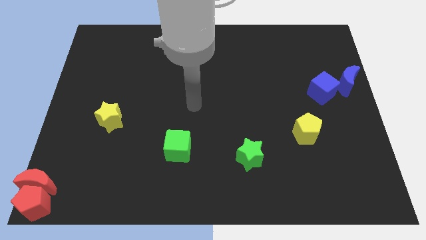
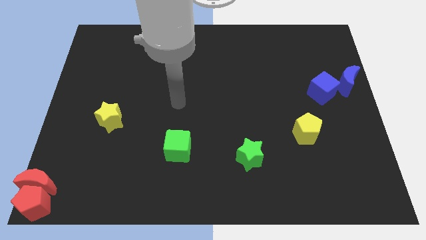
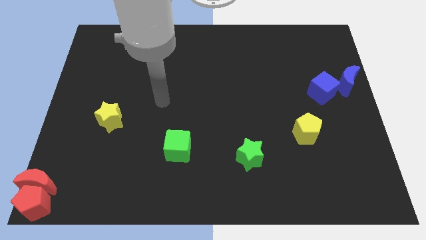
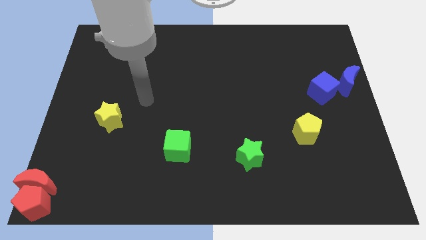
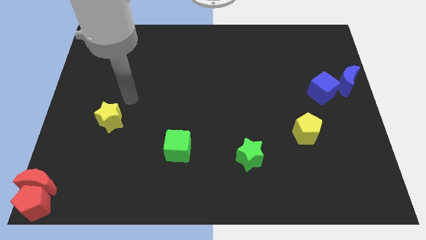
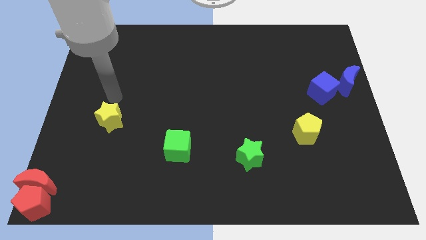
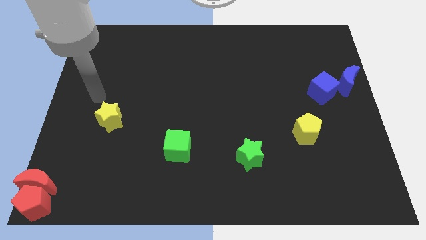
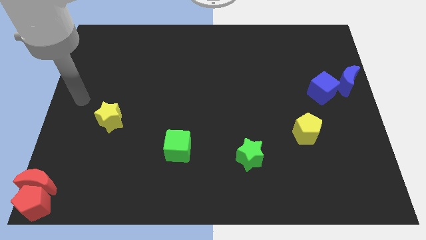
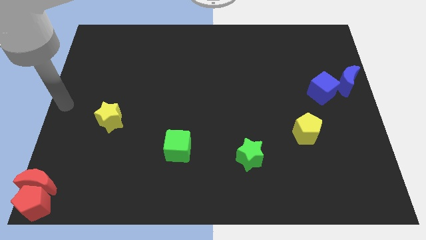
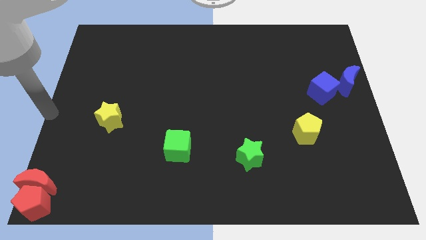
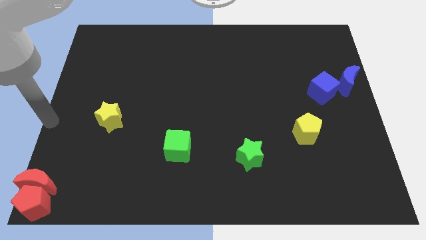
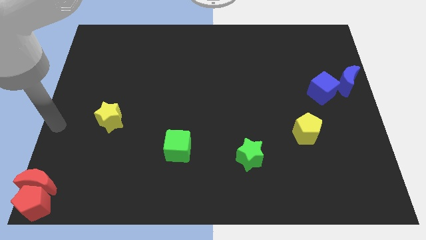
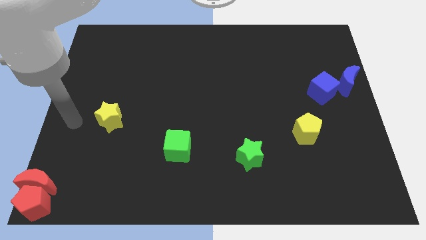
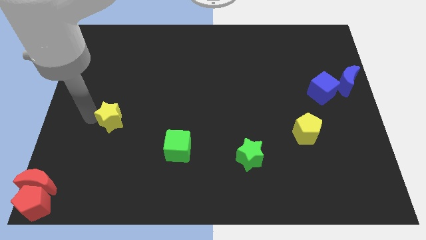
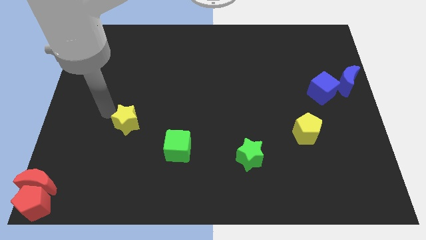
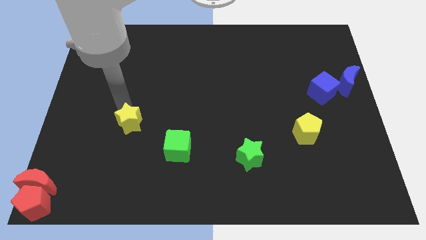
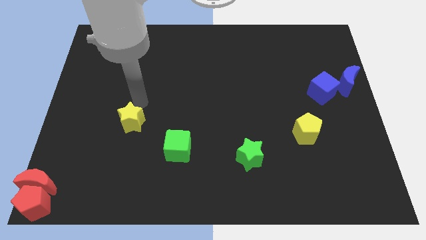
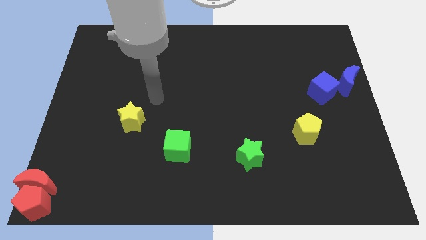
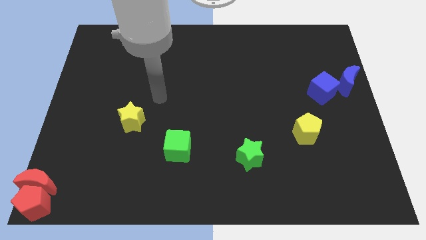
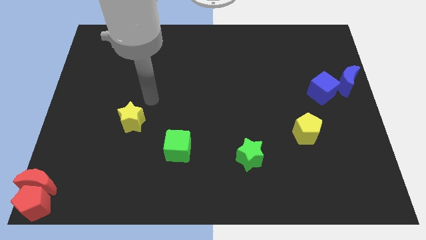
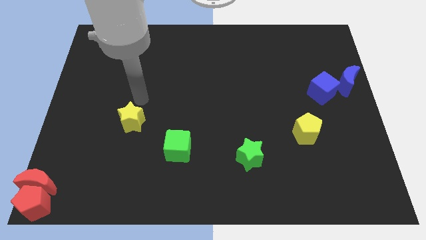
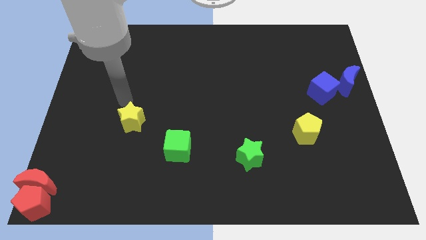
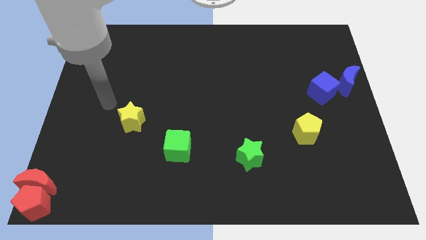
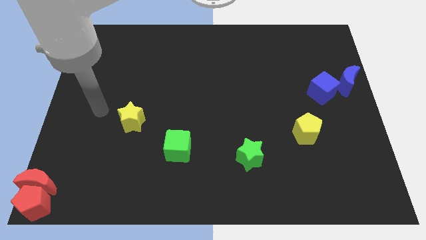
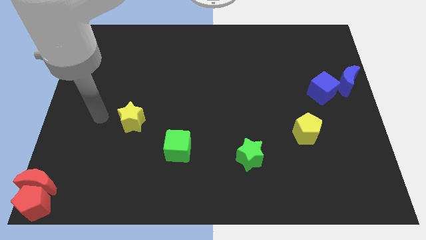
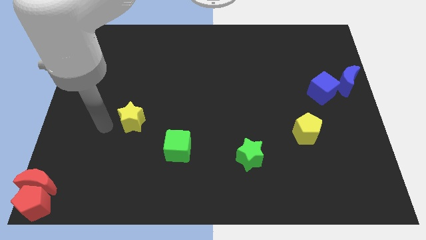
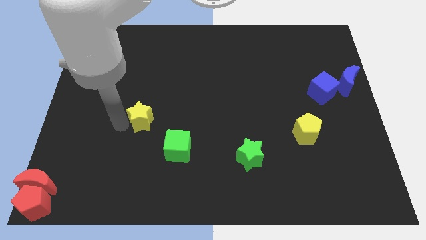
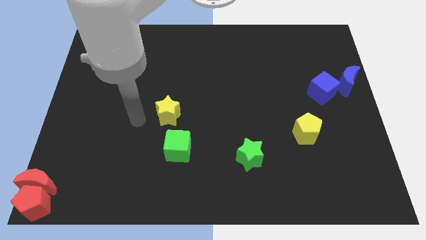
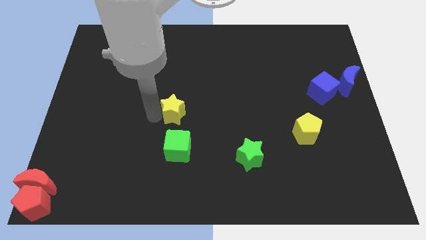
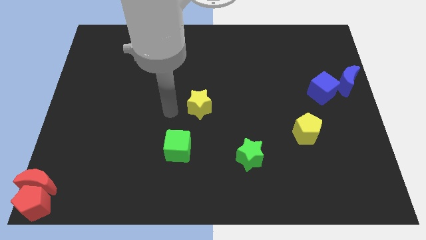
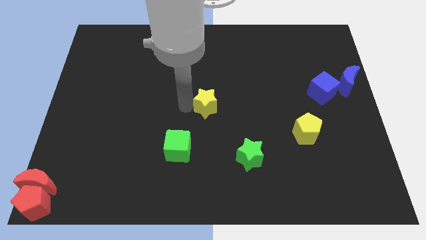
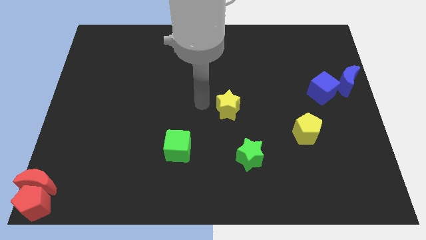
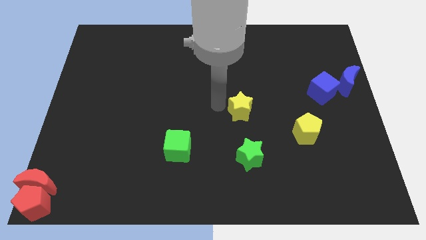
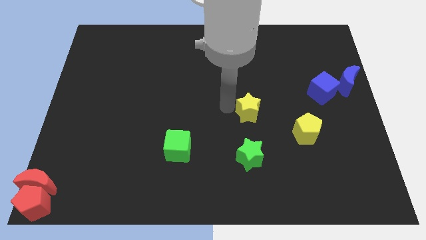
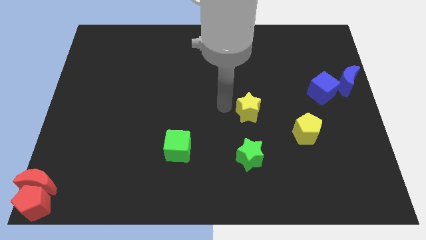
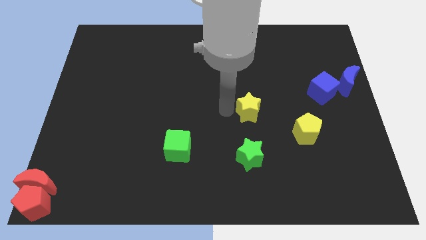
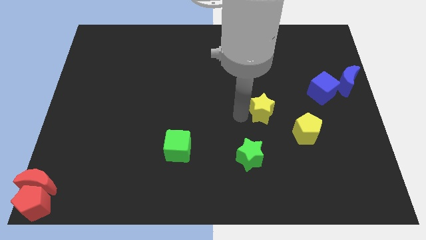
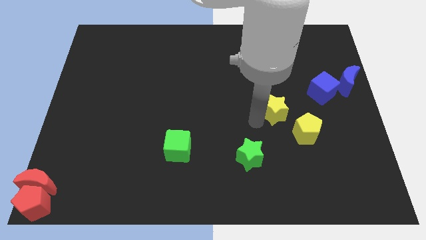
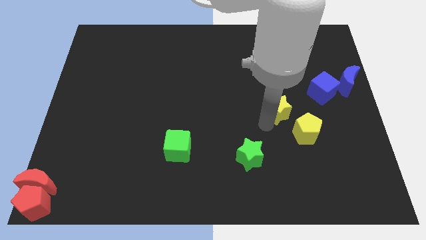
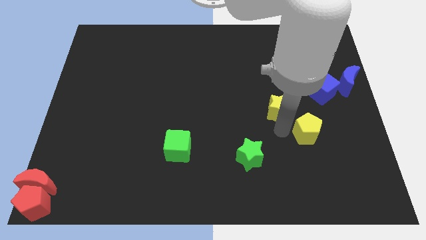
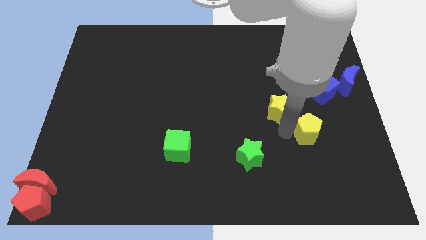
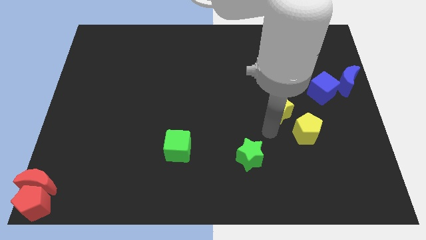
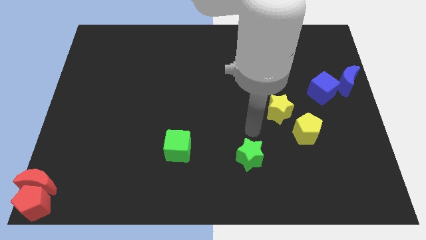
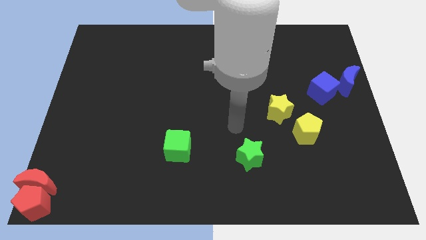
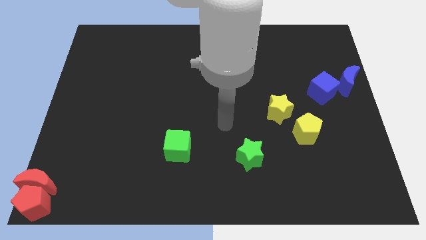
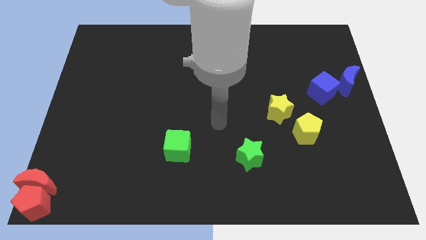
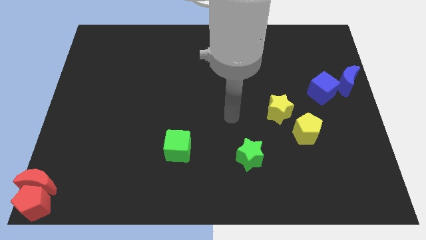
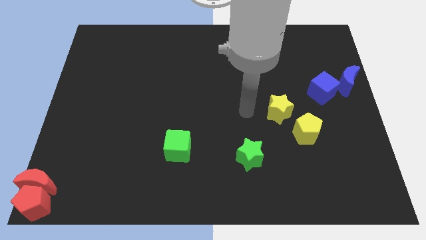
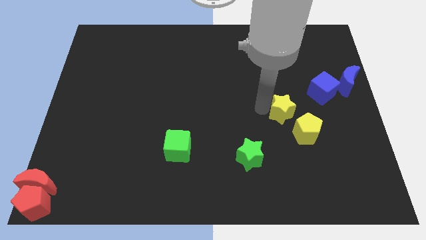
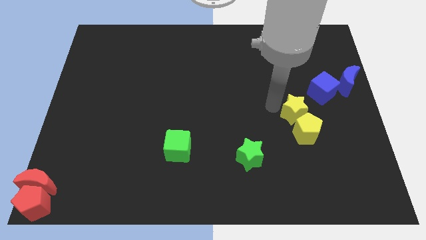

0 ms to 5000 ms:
push the yellow star into the yellow pentagon

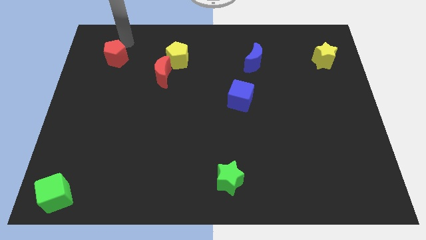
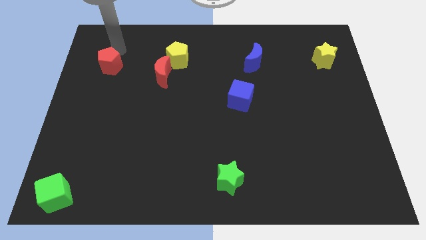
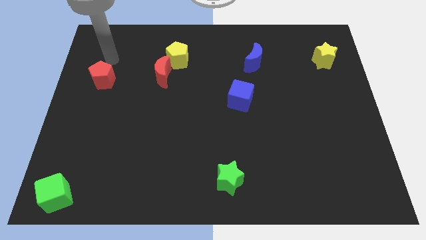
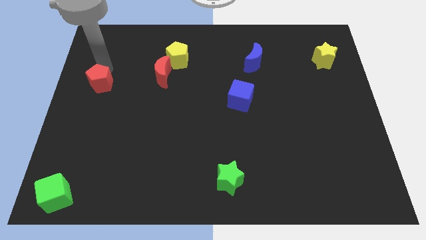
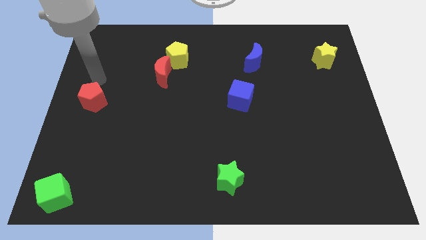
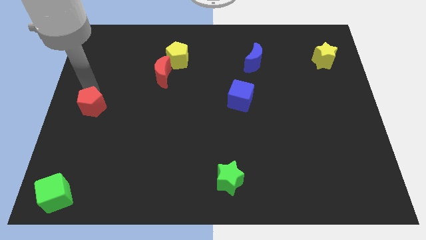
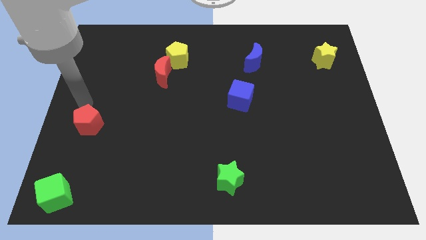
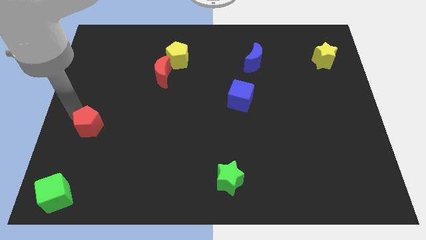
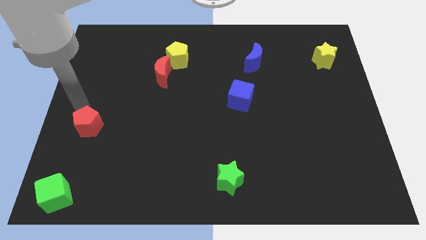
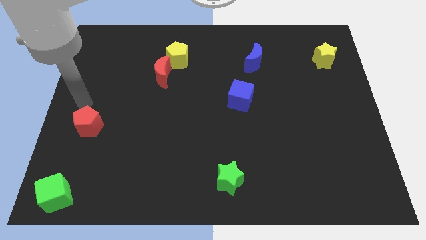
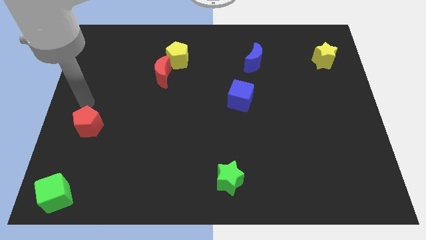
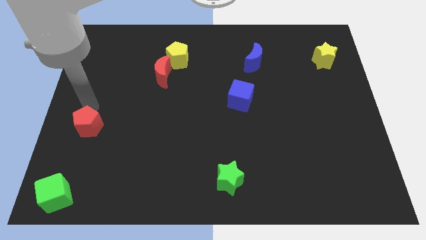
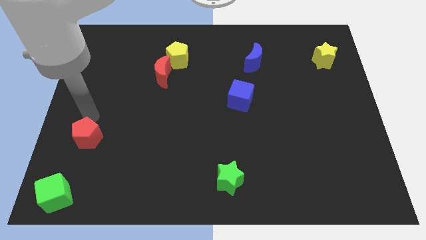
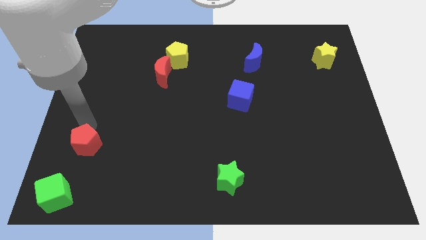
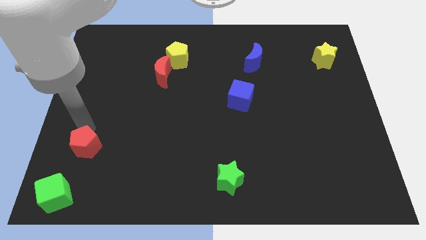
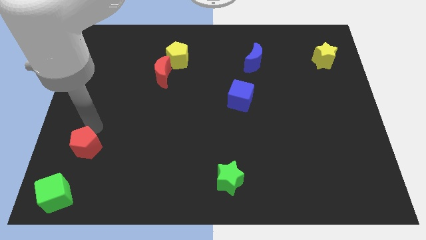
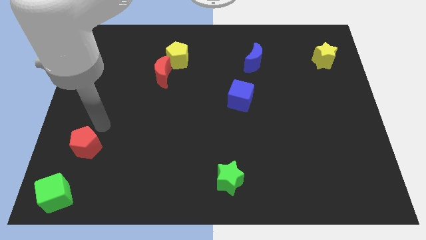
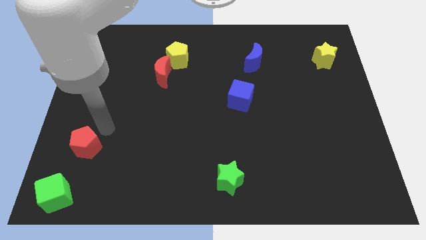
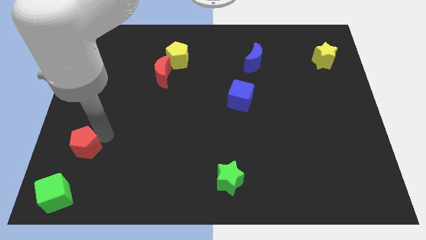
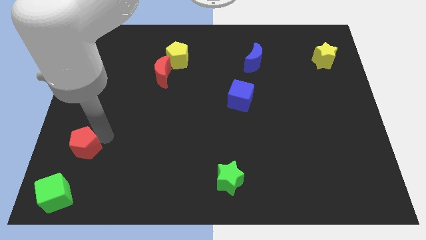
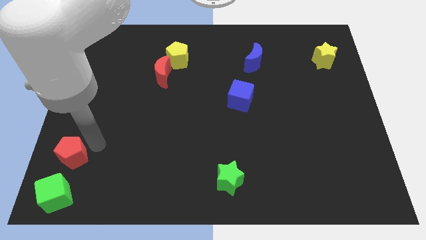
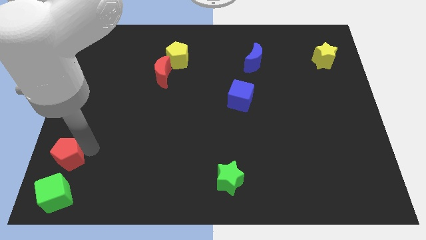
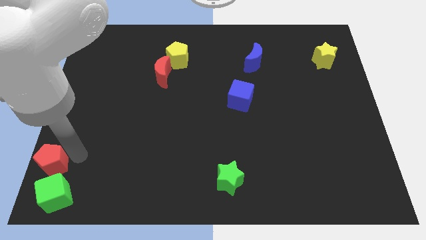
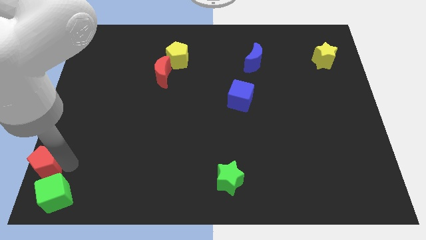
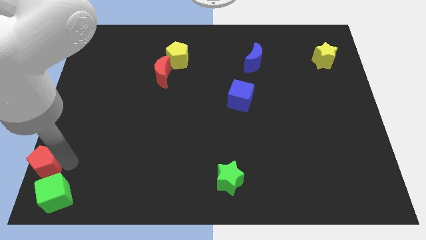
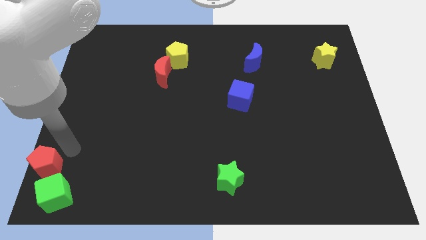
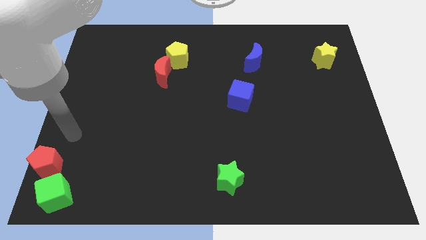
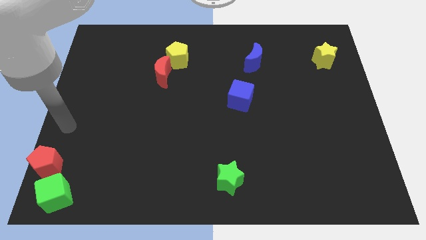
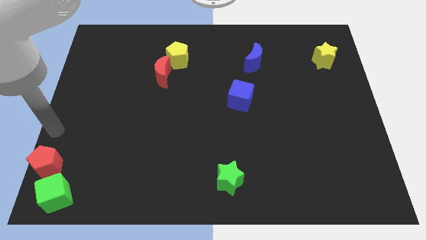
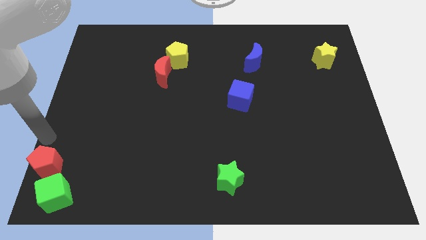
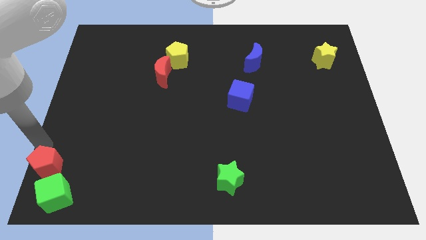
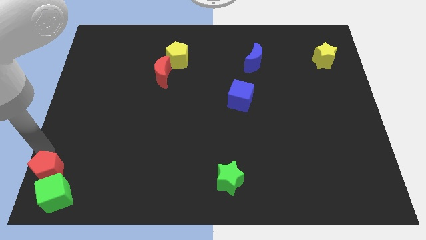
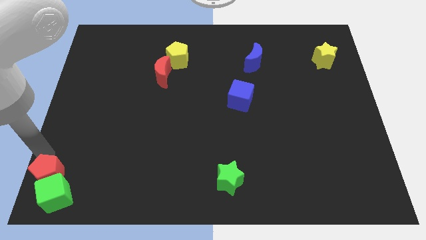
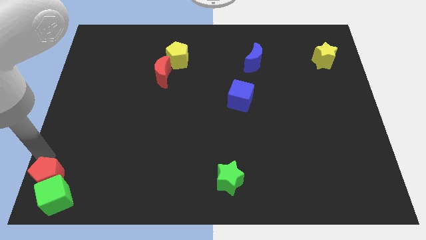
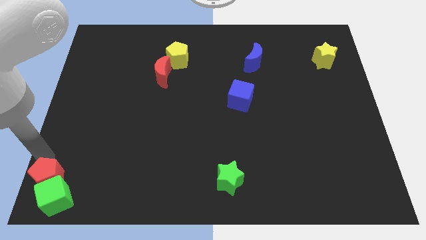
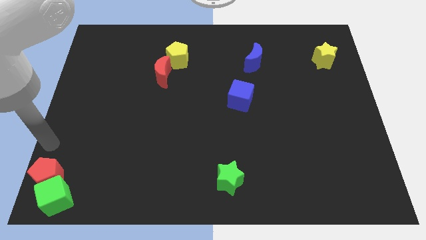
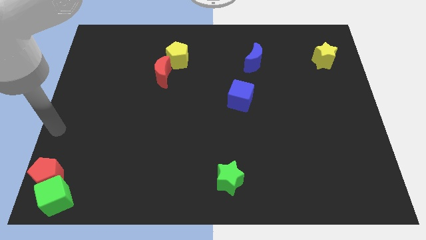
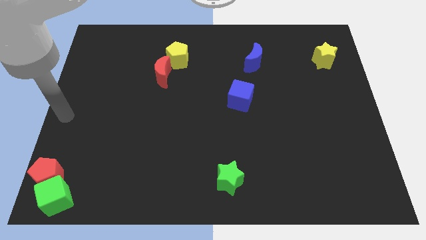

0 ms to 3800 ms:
push the red pentagon into the top side of the green cube
